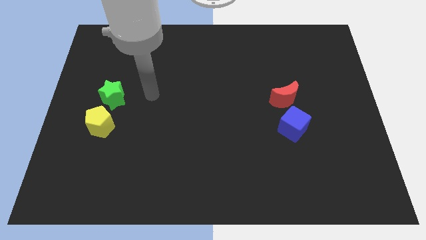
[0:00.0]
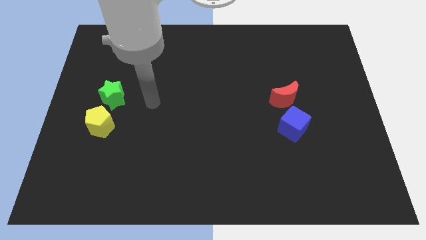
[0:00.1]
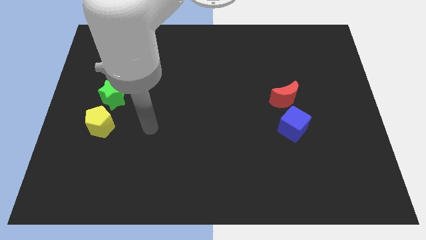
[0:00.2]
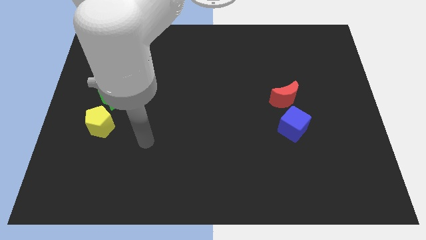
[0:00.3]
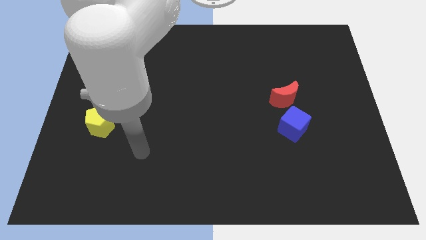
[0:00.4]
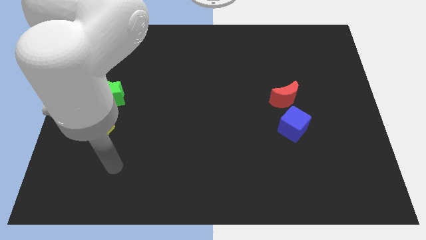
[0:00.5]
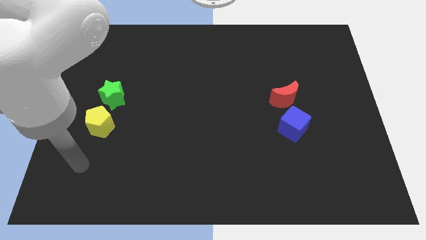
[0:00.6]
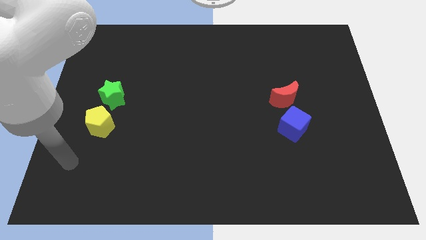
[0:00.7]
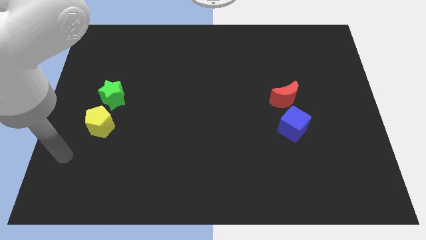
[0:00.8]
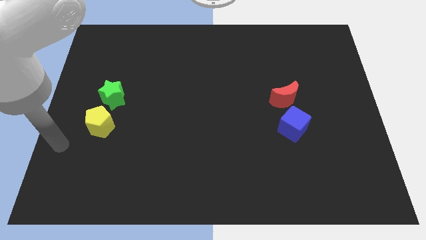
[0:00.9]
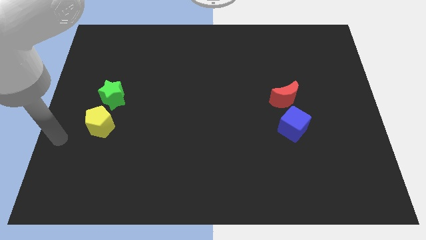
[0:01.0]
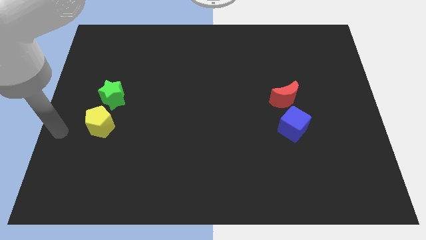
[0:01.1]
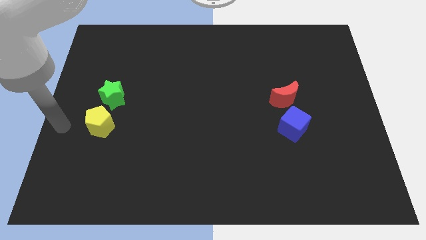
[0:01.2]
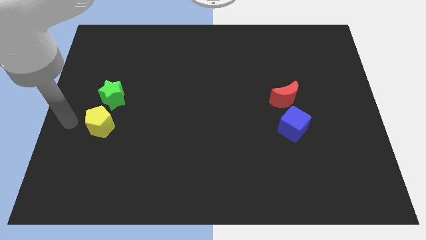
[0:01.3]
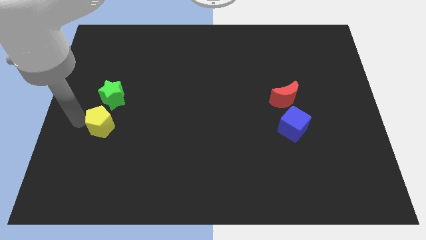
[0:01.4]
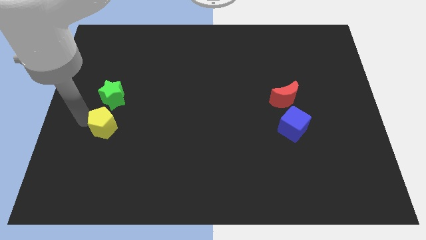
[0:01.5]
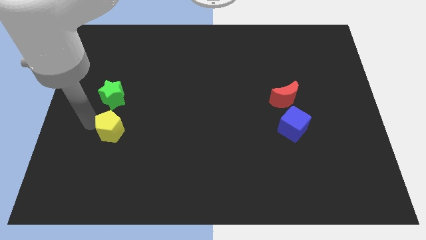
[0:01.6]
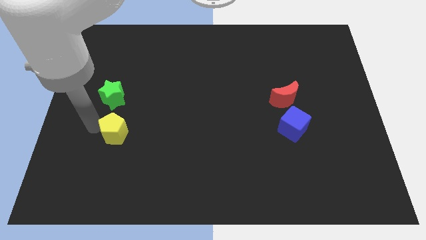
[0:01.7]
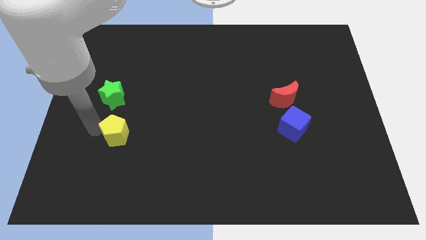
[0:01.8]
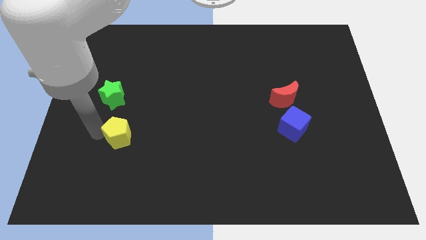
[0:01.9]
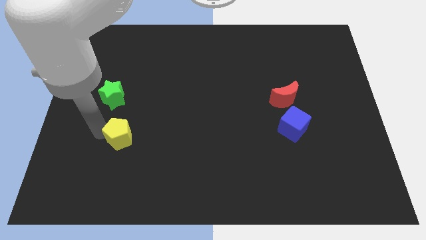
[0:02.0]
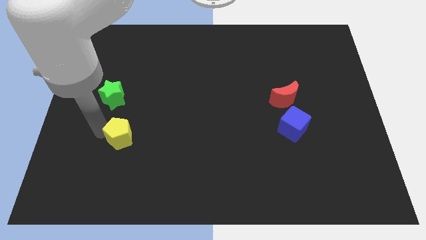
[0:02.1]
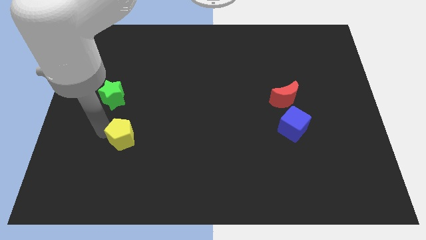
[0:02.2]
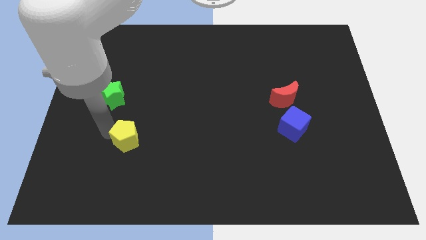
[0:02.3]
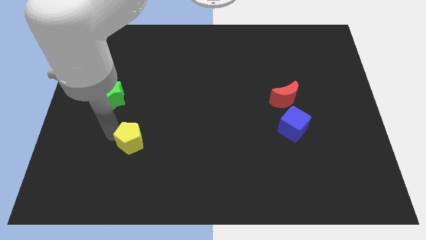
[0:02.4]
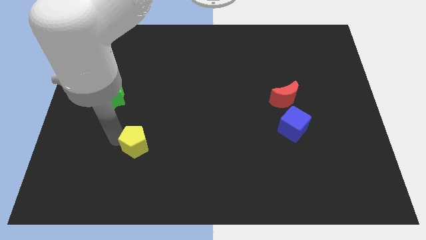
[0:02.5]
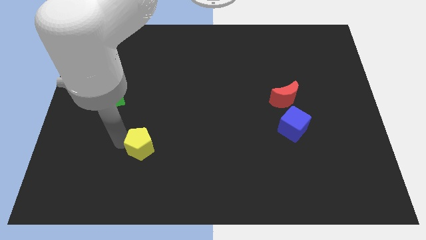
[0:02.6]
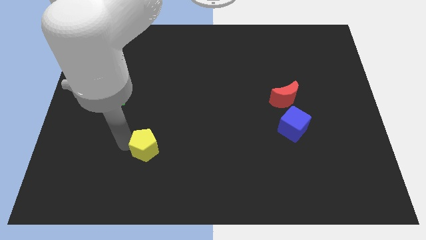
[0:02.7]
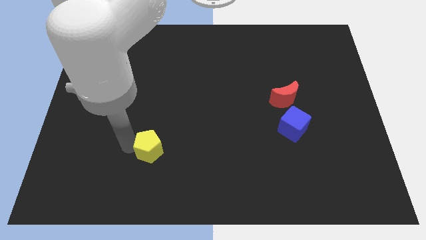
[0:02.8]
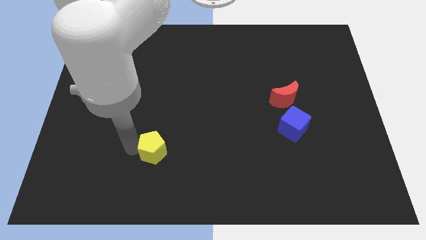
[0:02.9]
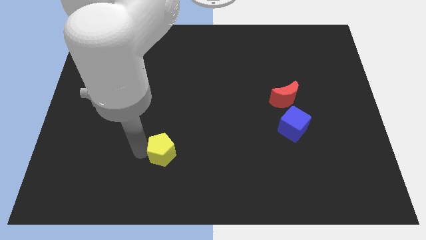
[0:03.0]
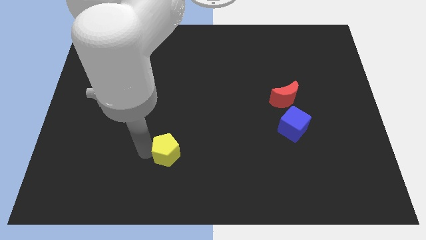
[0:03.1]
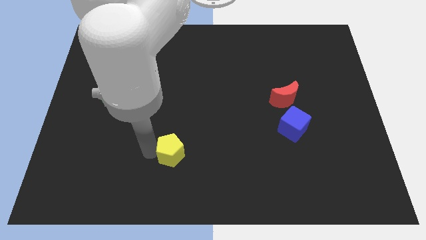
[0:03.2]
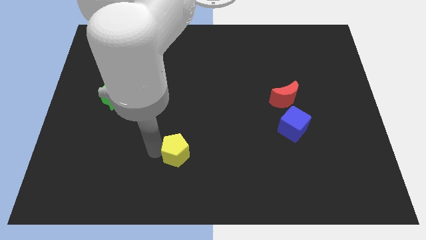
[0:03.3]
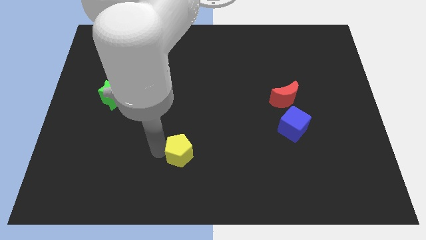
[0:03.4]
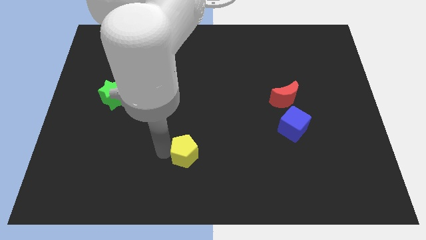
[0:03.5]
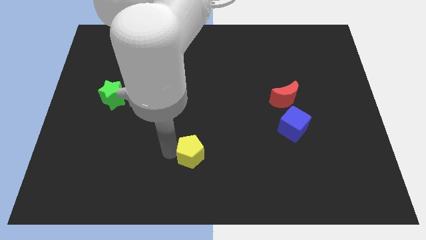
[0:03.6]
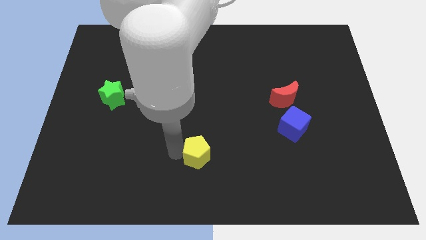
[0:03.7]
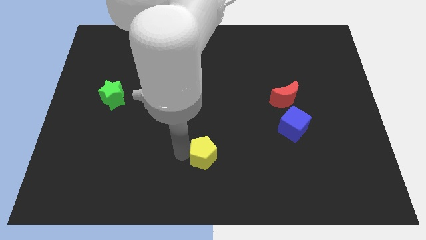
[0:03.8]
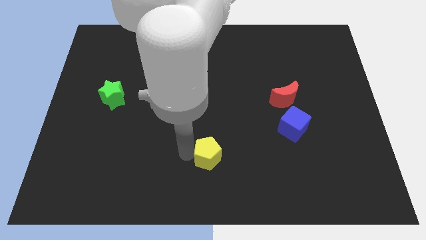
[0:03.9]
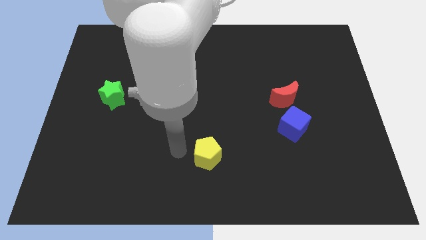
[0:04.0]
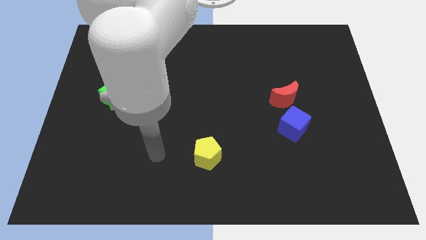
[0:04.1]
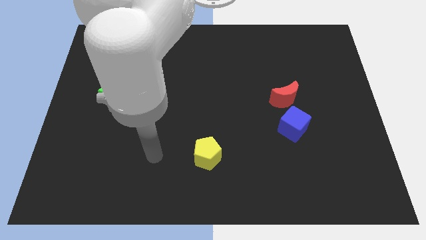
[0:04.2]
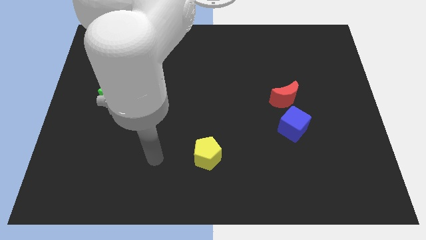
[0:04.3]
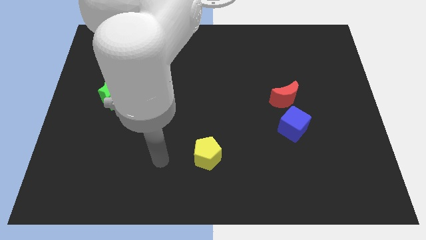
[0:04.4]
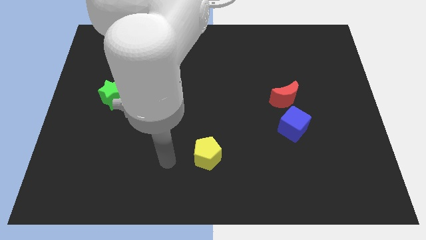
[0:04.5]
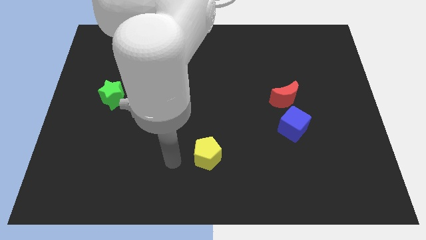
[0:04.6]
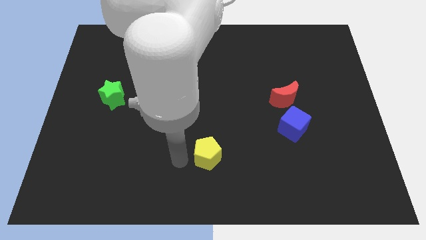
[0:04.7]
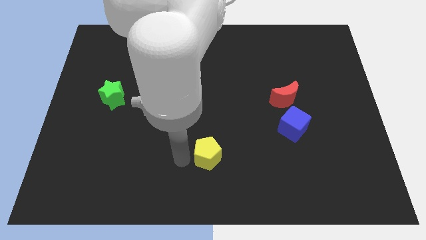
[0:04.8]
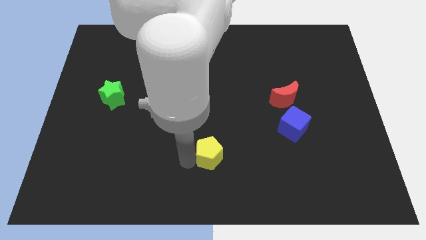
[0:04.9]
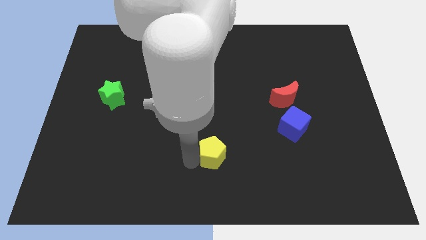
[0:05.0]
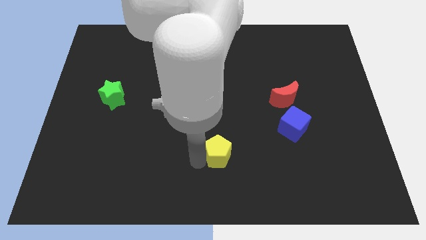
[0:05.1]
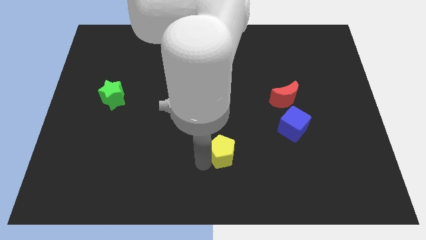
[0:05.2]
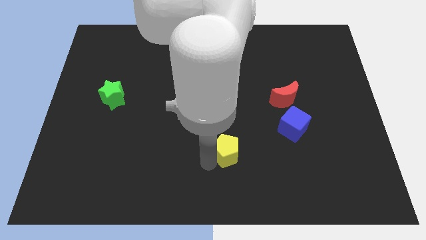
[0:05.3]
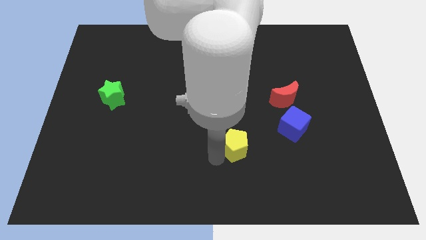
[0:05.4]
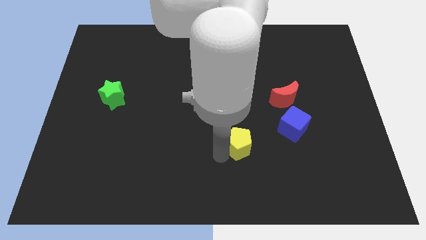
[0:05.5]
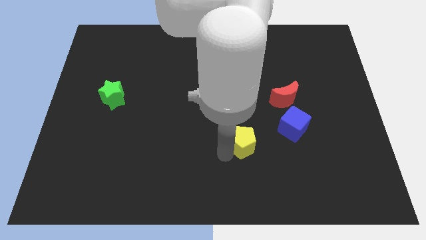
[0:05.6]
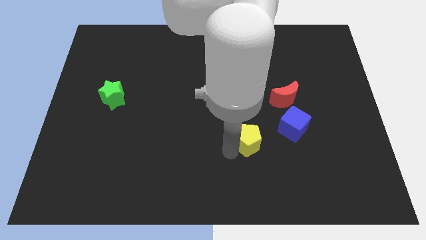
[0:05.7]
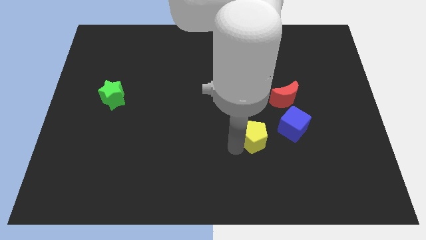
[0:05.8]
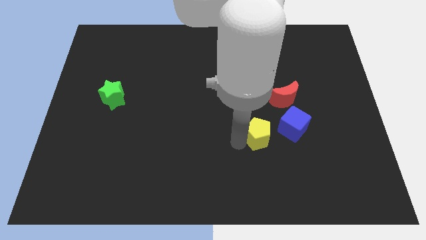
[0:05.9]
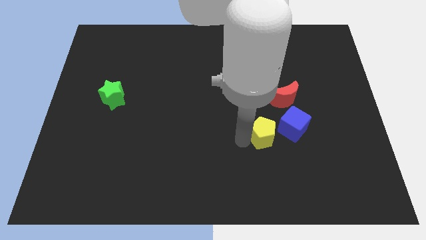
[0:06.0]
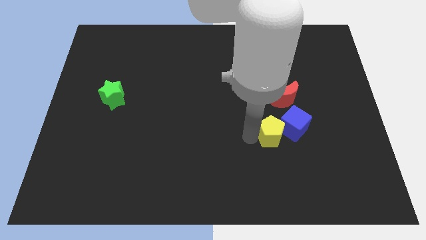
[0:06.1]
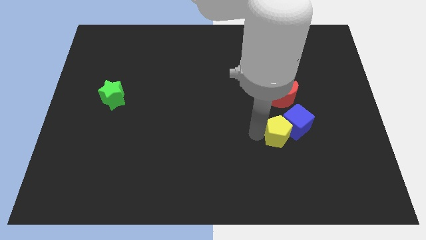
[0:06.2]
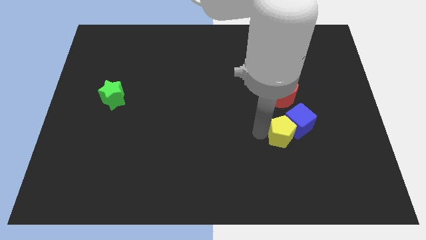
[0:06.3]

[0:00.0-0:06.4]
put the pentagon close to the blue block

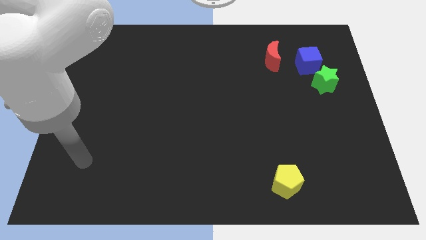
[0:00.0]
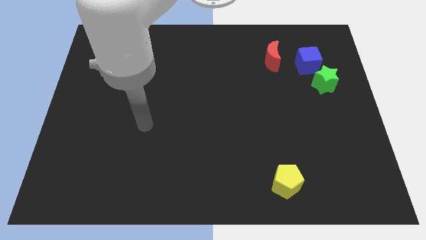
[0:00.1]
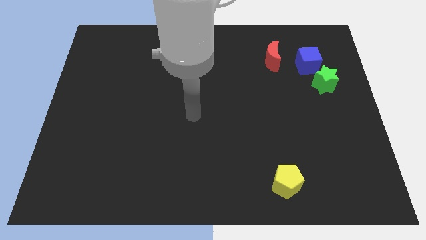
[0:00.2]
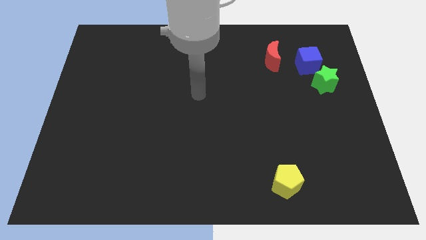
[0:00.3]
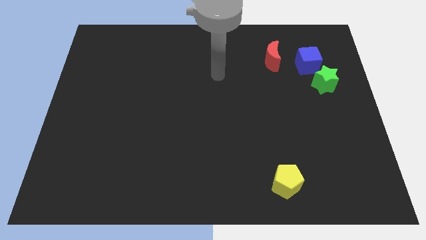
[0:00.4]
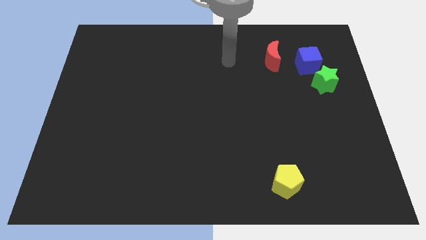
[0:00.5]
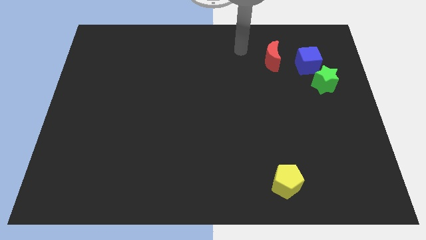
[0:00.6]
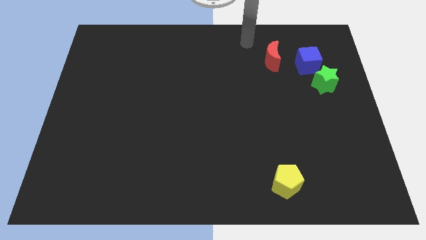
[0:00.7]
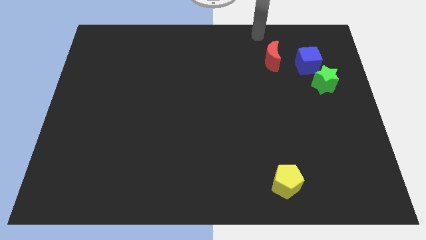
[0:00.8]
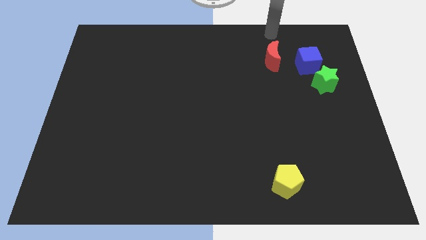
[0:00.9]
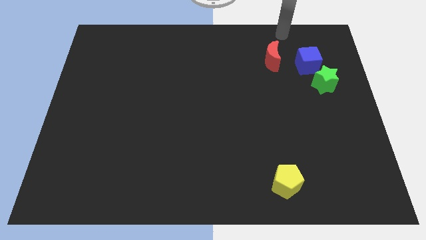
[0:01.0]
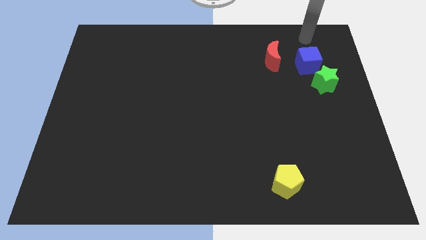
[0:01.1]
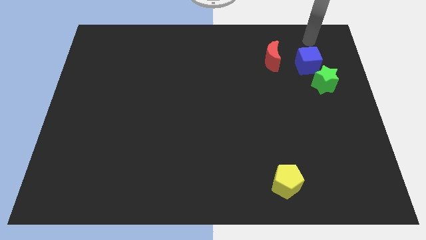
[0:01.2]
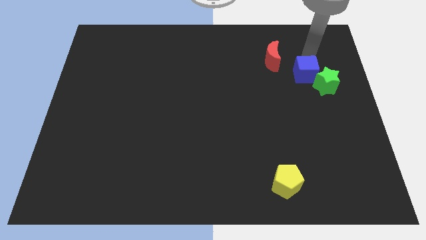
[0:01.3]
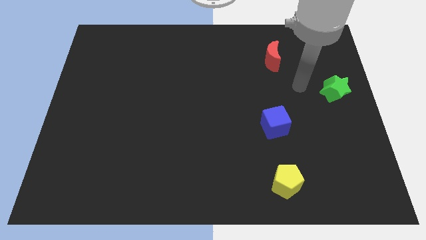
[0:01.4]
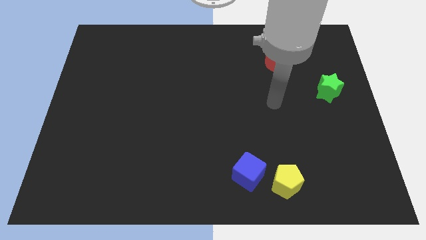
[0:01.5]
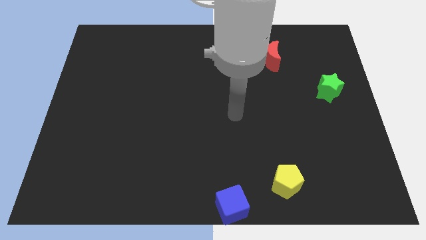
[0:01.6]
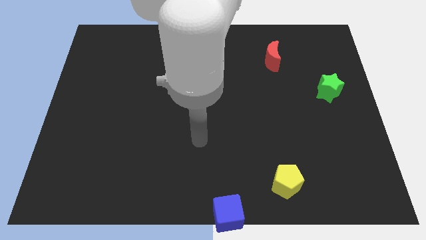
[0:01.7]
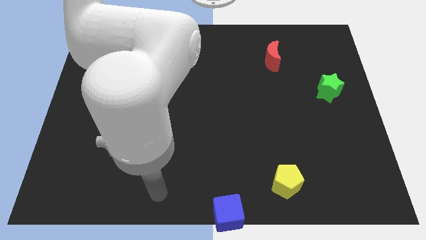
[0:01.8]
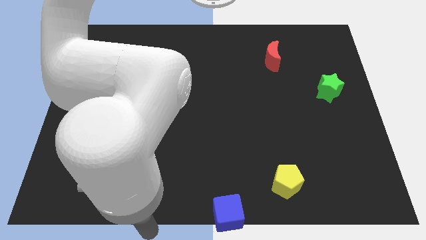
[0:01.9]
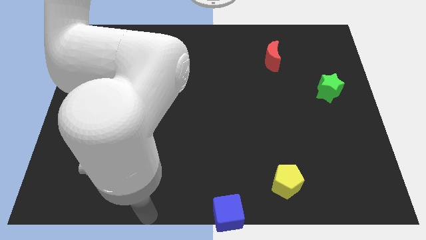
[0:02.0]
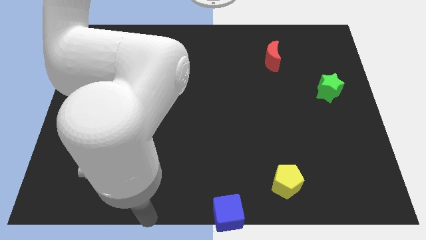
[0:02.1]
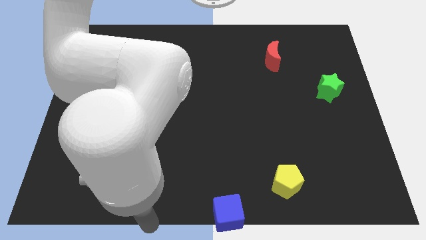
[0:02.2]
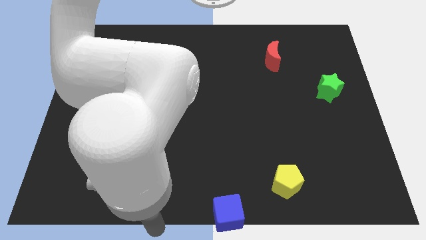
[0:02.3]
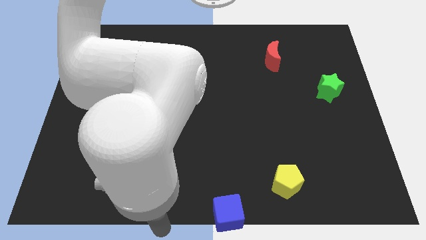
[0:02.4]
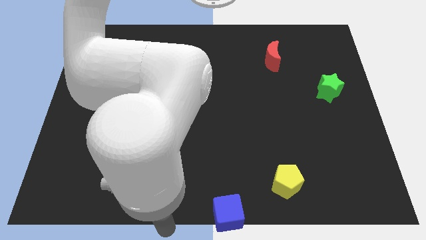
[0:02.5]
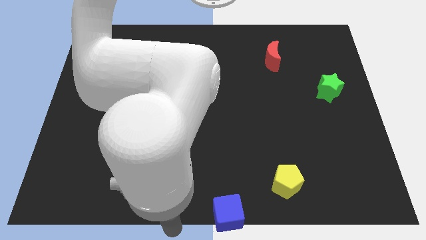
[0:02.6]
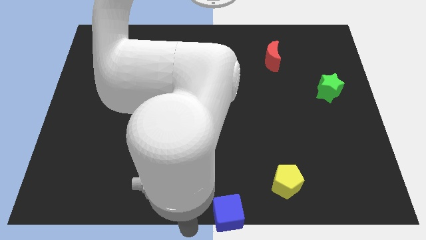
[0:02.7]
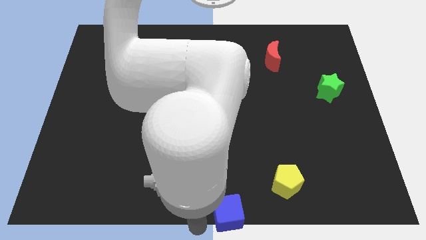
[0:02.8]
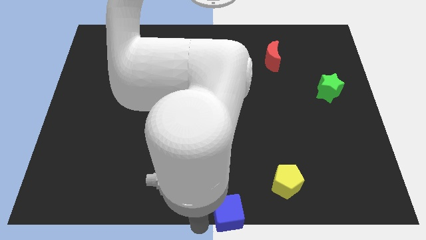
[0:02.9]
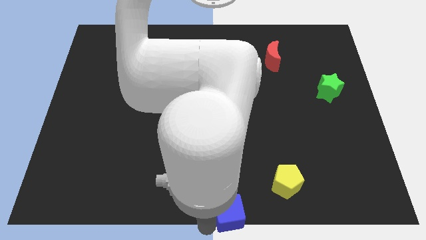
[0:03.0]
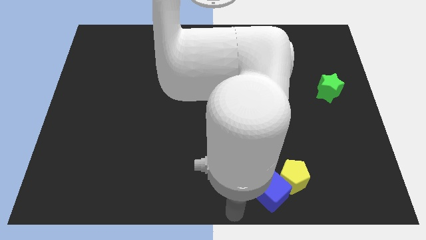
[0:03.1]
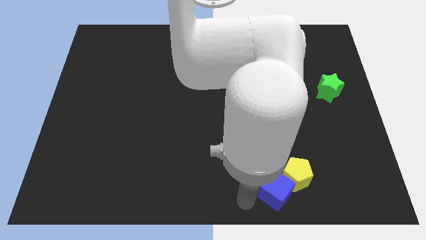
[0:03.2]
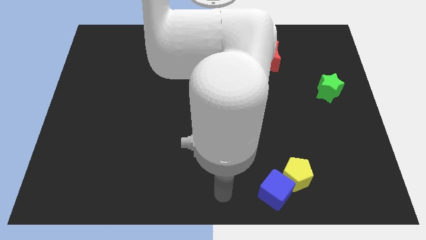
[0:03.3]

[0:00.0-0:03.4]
slide the blue cube next to the yellow pentagon
